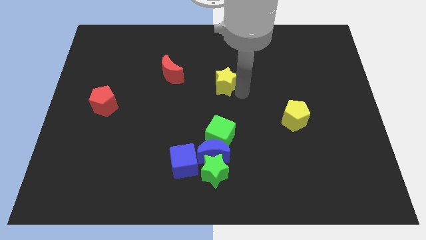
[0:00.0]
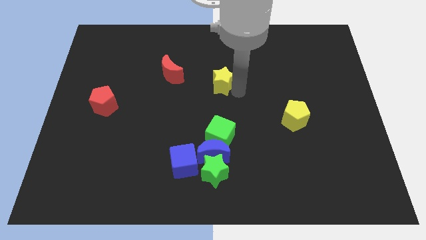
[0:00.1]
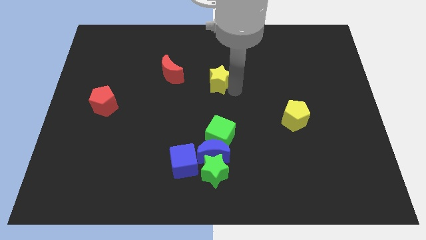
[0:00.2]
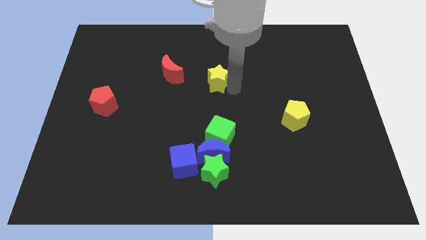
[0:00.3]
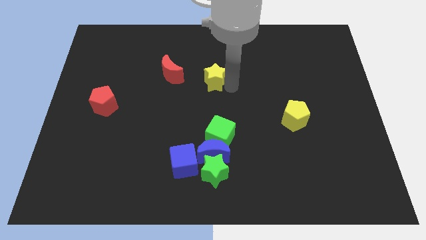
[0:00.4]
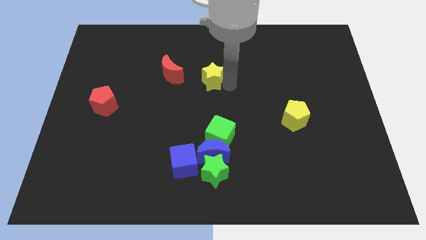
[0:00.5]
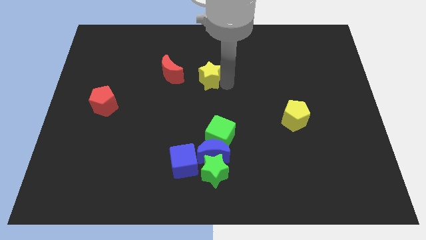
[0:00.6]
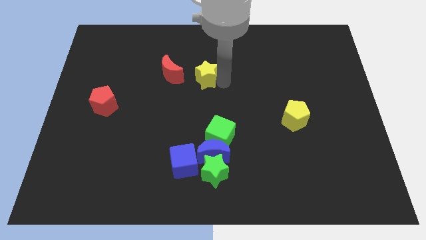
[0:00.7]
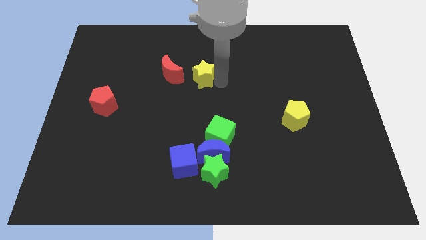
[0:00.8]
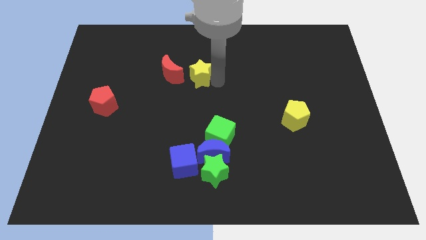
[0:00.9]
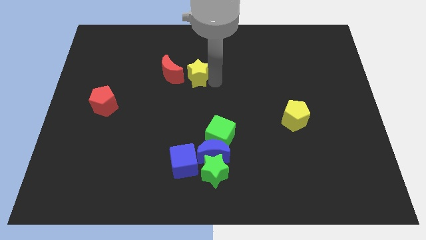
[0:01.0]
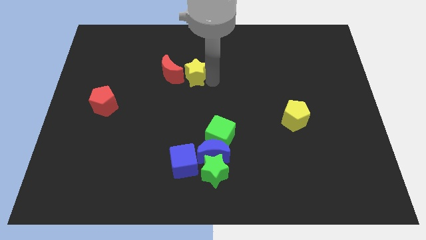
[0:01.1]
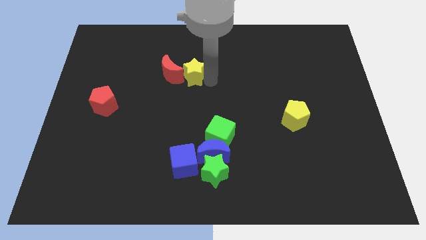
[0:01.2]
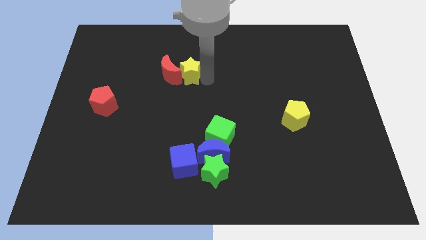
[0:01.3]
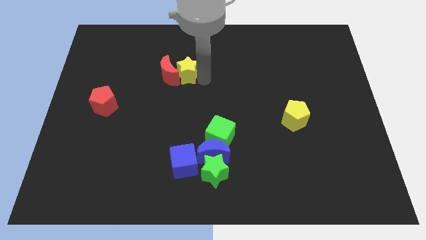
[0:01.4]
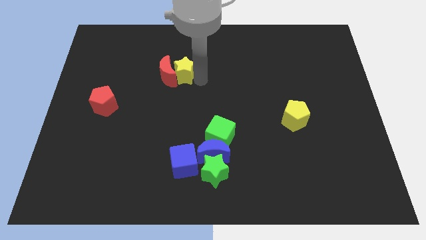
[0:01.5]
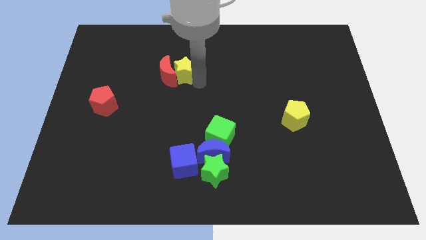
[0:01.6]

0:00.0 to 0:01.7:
push the yellow star to the right side of the red crescent

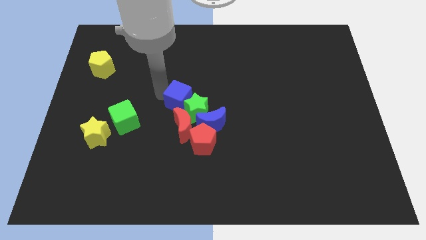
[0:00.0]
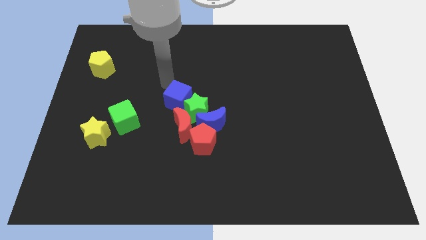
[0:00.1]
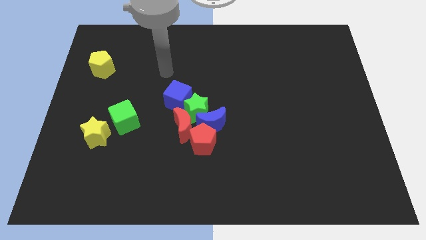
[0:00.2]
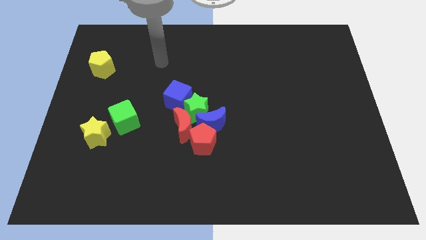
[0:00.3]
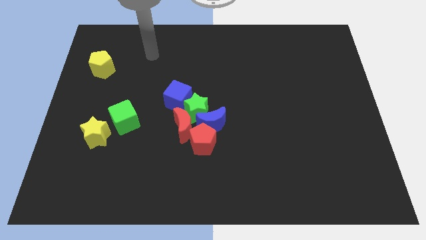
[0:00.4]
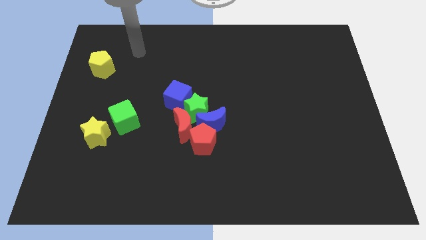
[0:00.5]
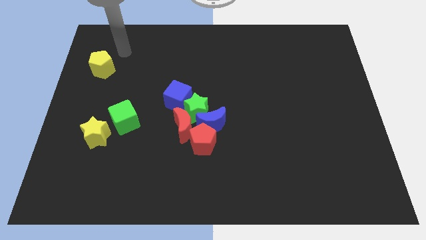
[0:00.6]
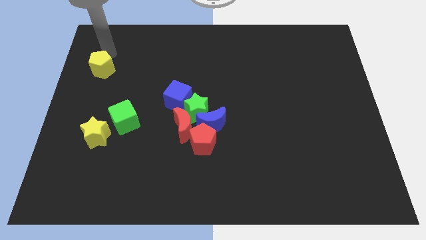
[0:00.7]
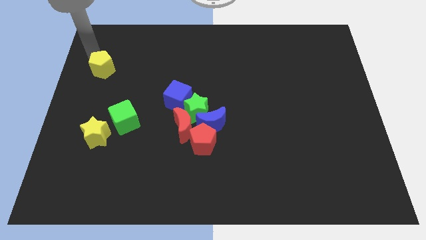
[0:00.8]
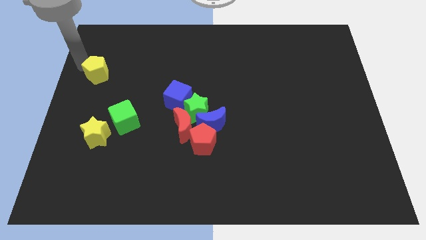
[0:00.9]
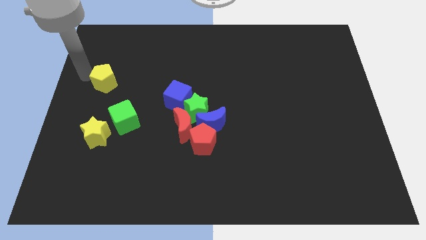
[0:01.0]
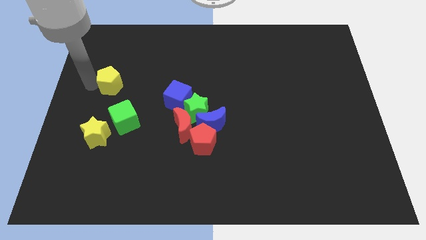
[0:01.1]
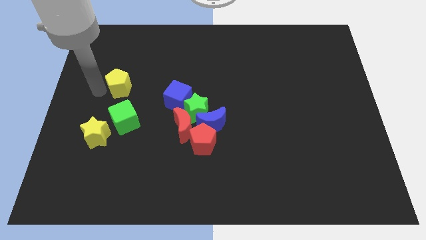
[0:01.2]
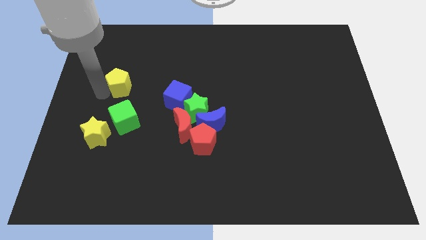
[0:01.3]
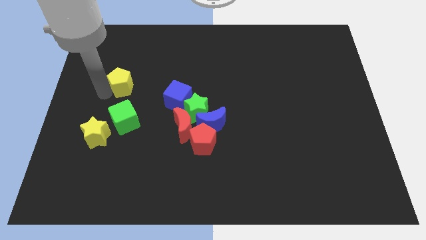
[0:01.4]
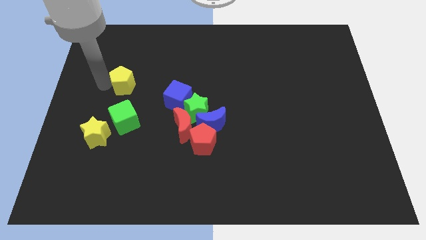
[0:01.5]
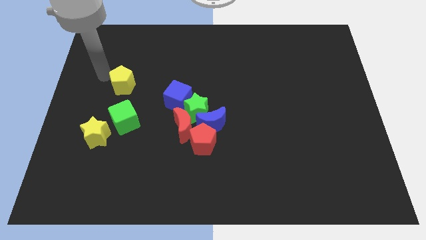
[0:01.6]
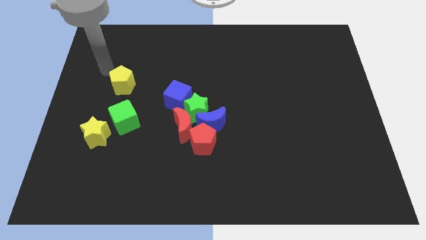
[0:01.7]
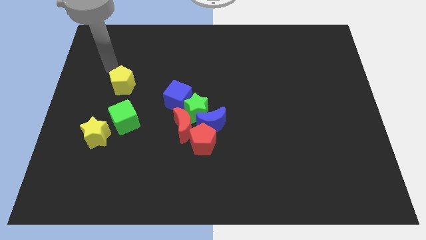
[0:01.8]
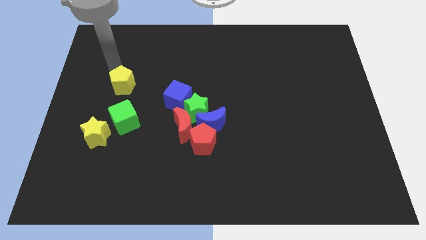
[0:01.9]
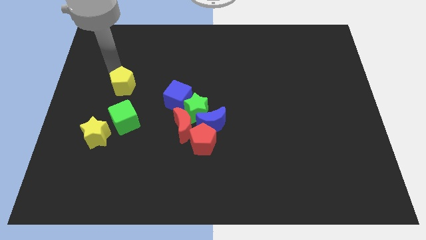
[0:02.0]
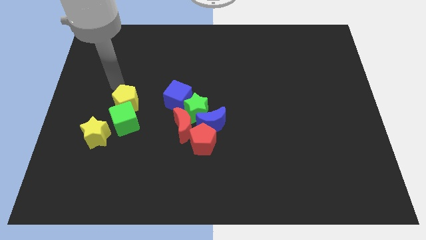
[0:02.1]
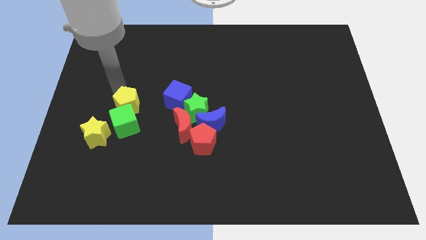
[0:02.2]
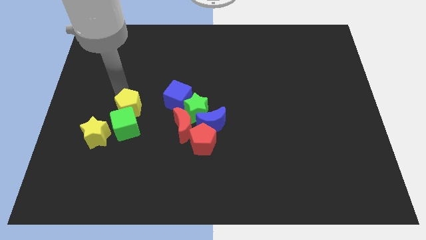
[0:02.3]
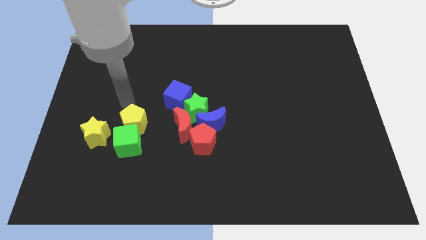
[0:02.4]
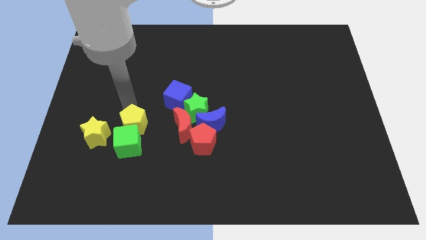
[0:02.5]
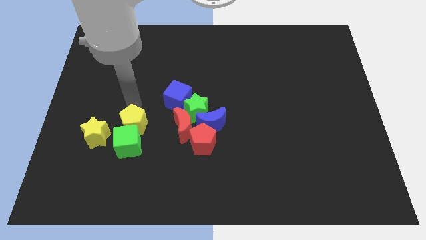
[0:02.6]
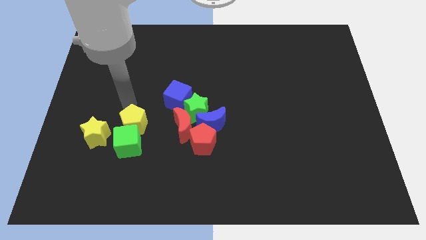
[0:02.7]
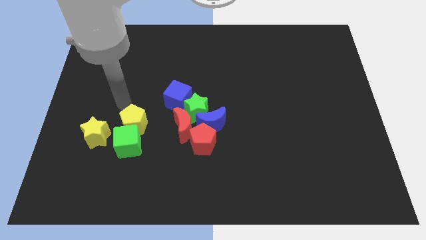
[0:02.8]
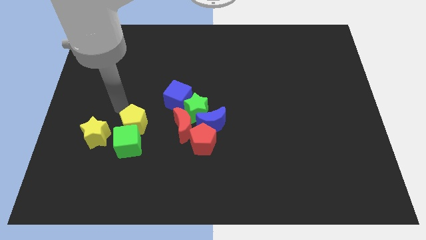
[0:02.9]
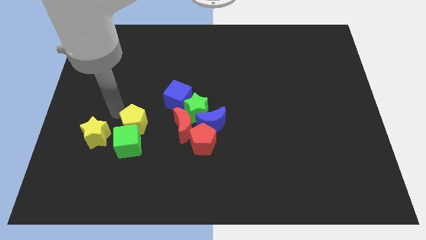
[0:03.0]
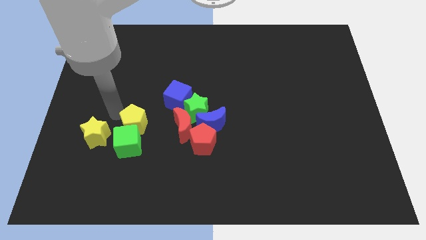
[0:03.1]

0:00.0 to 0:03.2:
slide the yellow pentagon to the top side of the green cube

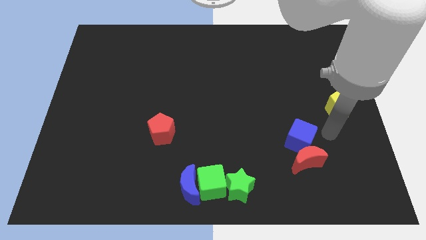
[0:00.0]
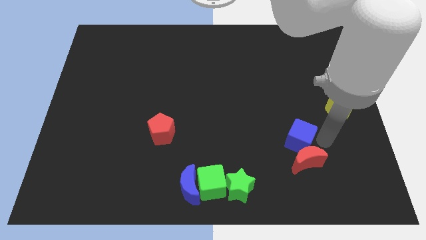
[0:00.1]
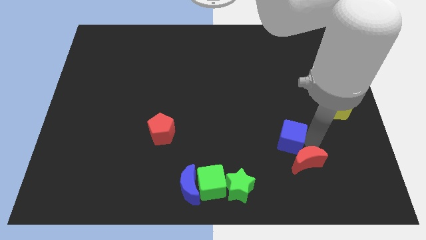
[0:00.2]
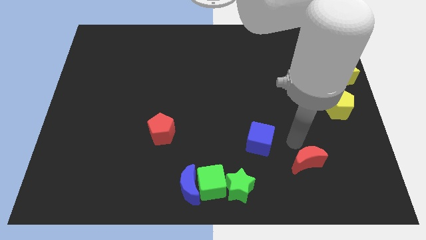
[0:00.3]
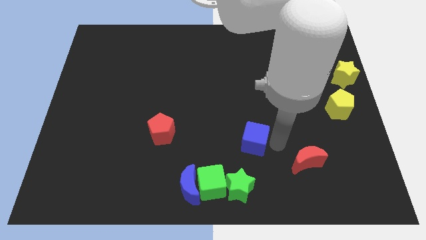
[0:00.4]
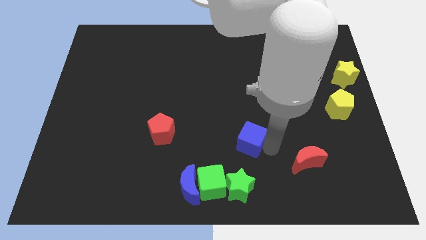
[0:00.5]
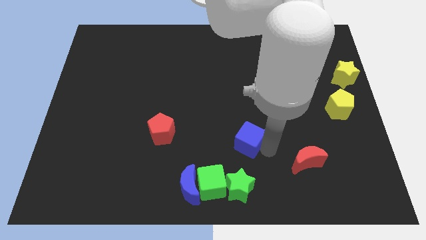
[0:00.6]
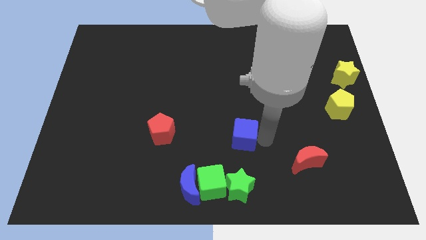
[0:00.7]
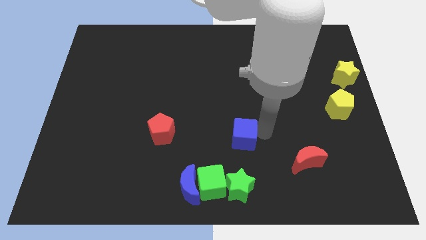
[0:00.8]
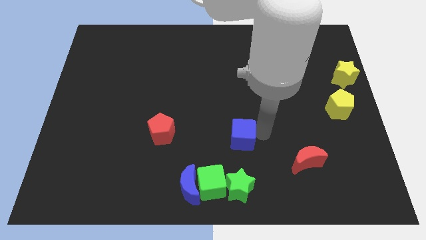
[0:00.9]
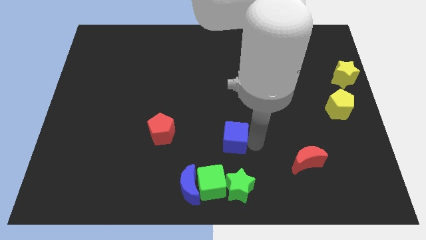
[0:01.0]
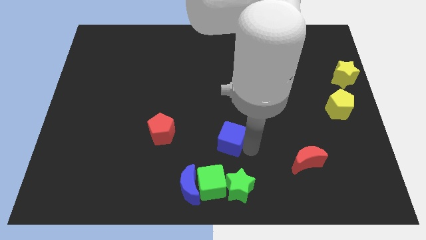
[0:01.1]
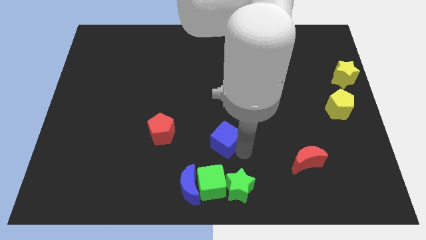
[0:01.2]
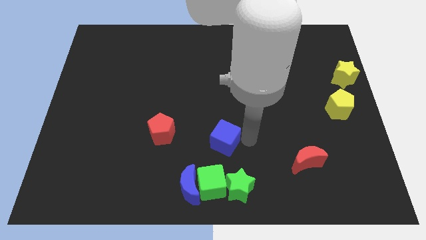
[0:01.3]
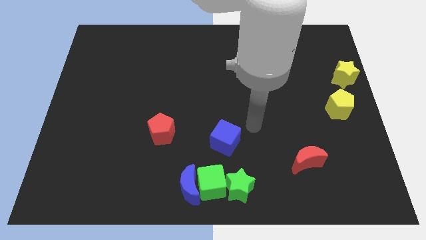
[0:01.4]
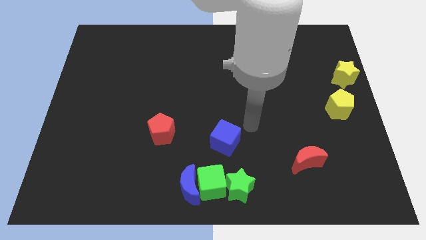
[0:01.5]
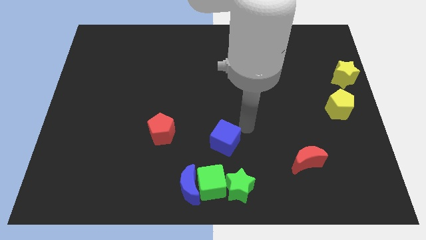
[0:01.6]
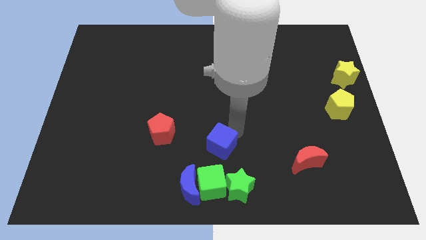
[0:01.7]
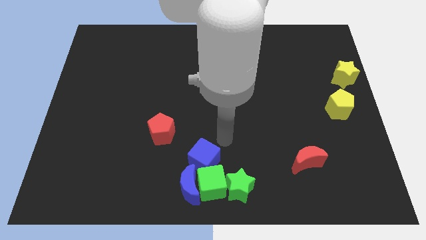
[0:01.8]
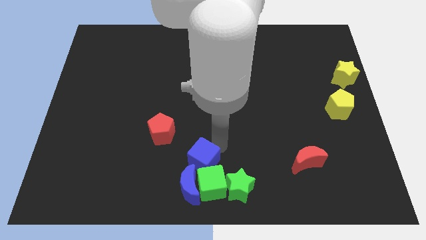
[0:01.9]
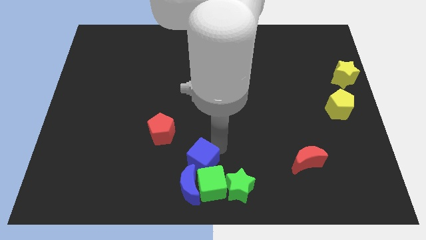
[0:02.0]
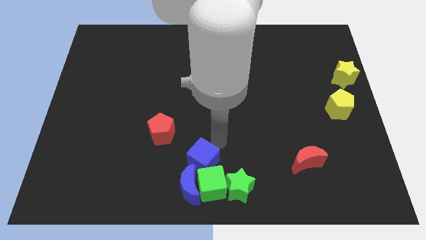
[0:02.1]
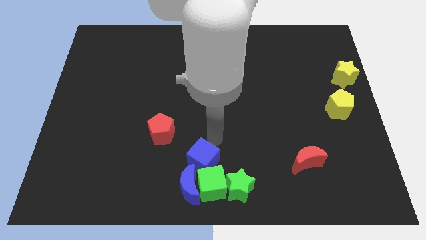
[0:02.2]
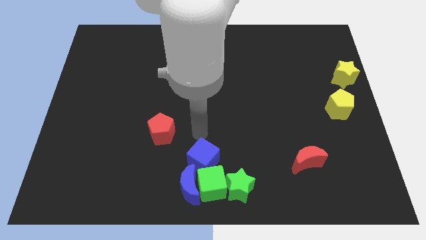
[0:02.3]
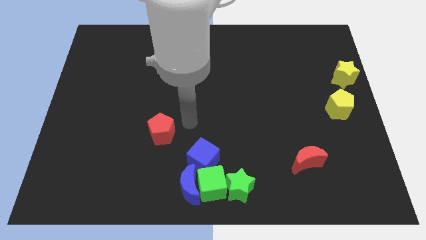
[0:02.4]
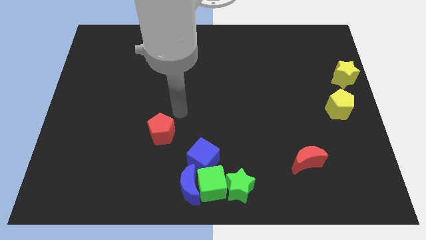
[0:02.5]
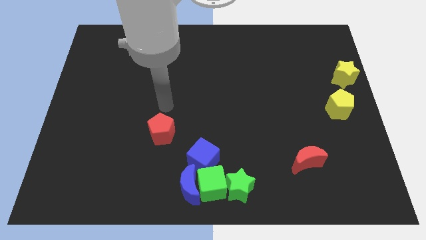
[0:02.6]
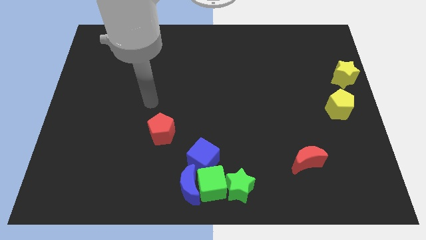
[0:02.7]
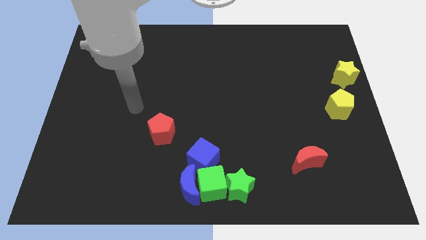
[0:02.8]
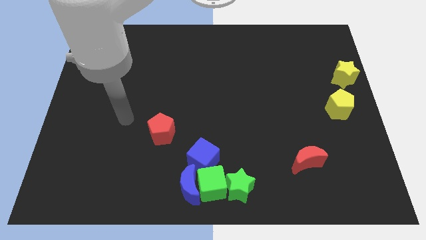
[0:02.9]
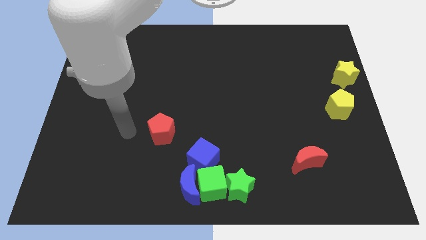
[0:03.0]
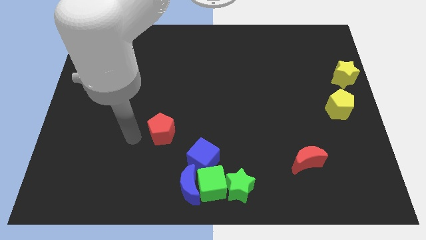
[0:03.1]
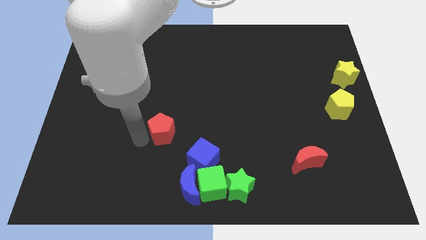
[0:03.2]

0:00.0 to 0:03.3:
add the blue cube to the group of blocks at the bottom center of the board

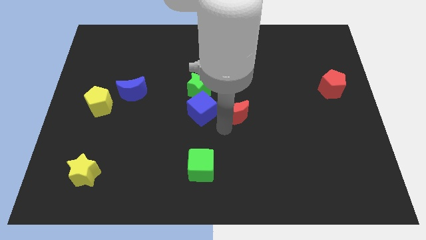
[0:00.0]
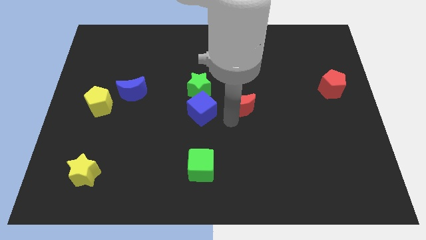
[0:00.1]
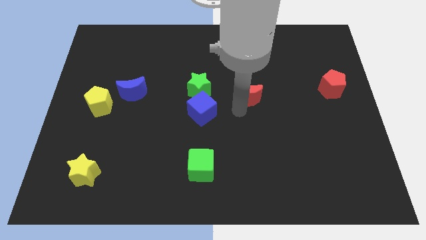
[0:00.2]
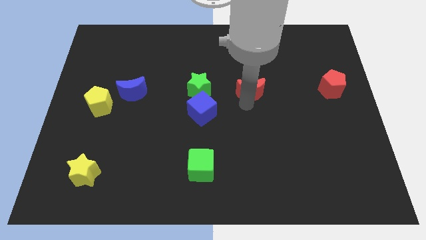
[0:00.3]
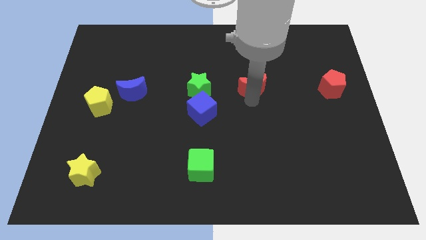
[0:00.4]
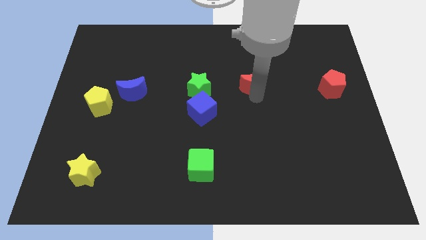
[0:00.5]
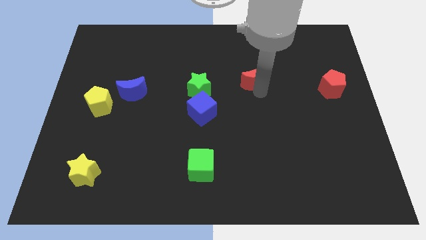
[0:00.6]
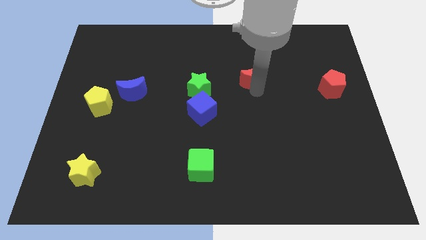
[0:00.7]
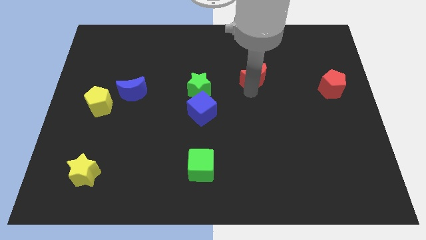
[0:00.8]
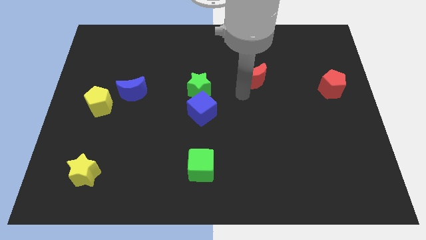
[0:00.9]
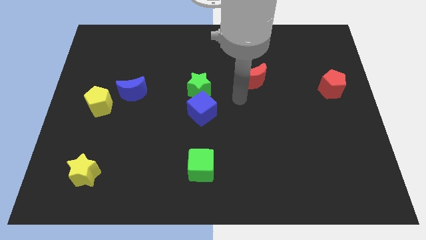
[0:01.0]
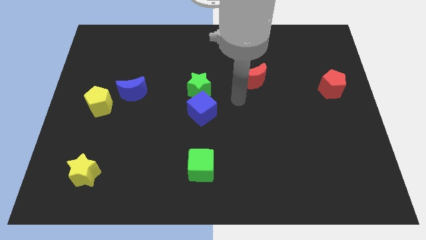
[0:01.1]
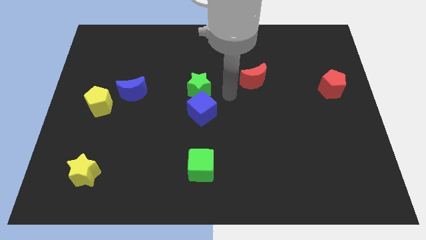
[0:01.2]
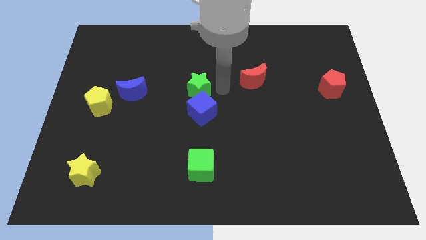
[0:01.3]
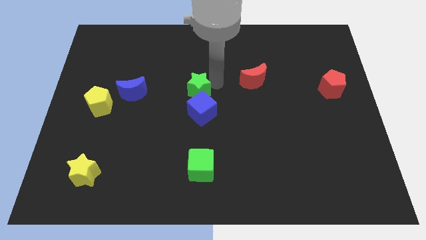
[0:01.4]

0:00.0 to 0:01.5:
move red moon away from the blue cube
